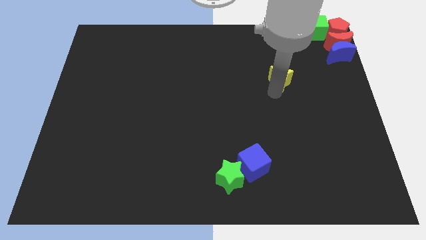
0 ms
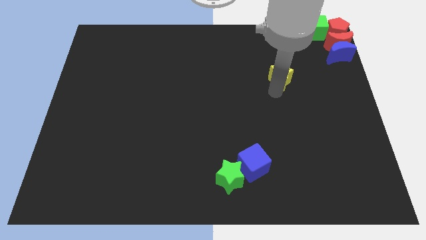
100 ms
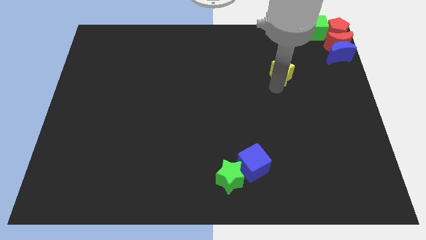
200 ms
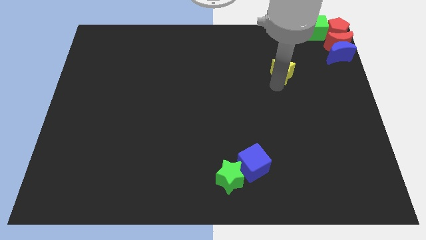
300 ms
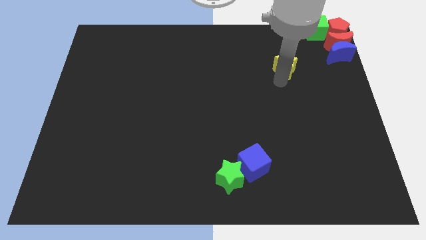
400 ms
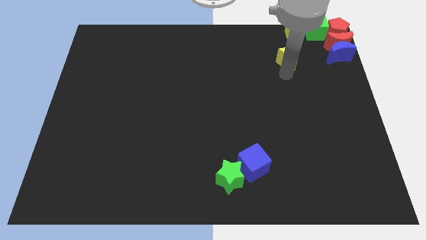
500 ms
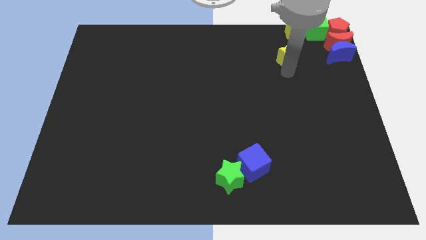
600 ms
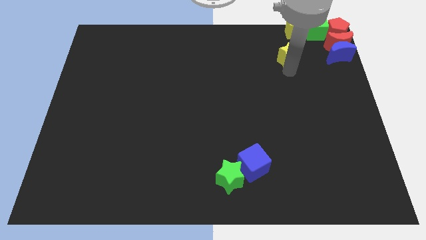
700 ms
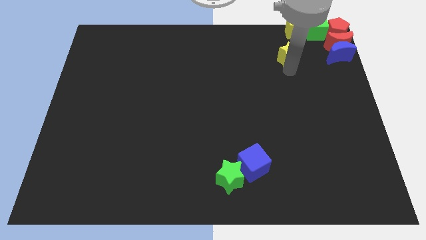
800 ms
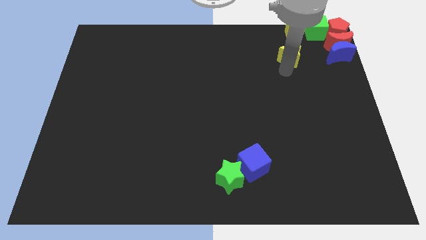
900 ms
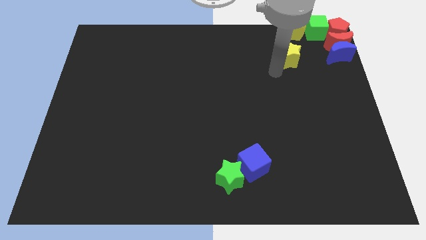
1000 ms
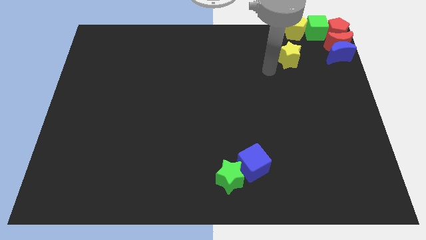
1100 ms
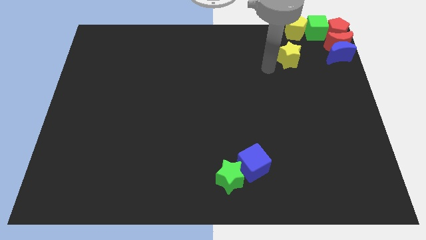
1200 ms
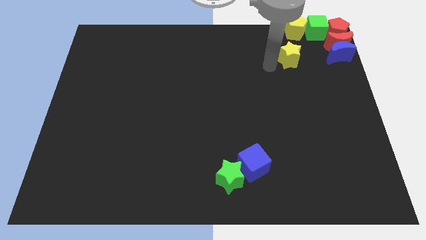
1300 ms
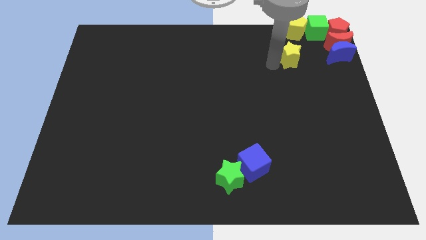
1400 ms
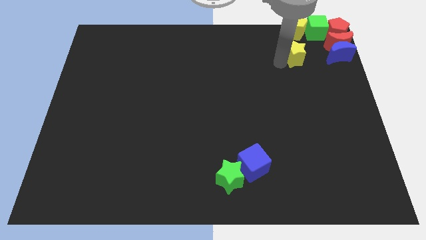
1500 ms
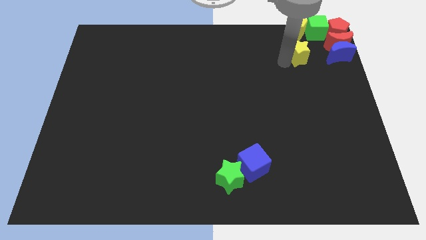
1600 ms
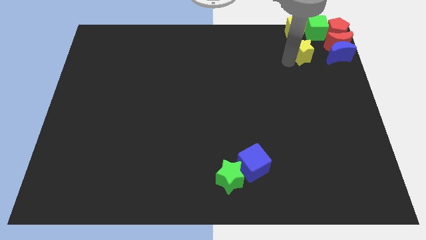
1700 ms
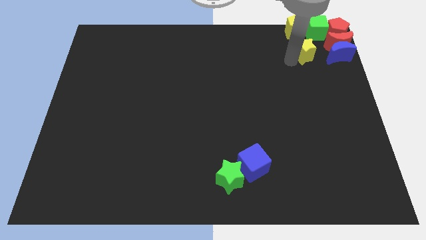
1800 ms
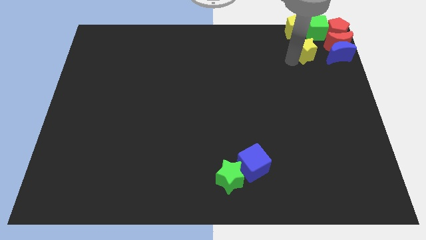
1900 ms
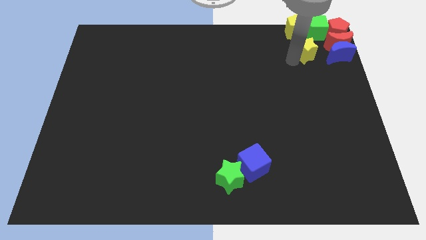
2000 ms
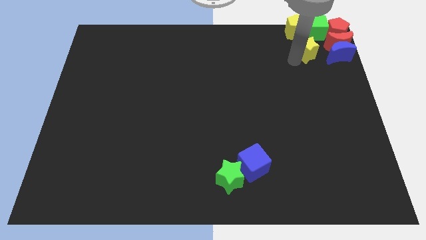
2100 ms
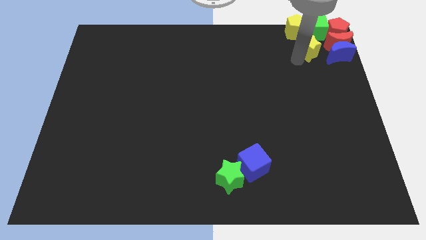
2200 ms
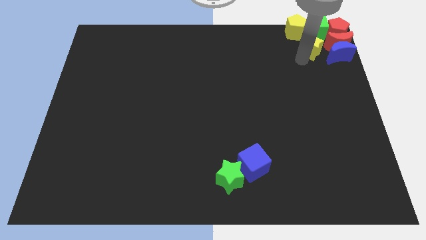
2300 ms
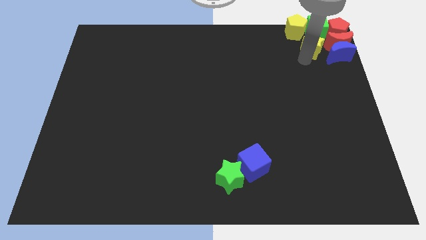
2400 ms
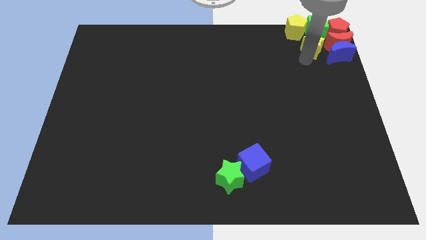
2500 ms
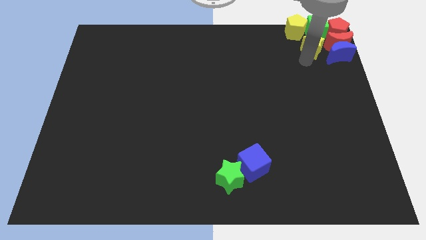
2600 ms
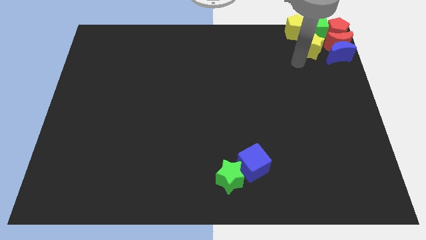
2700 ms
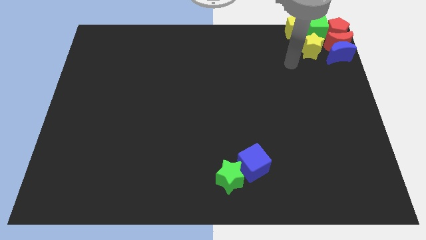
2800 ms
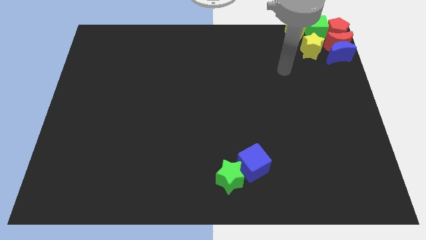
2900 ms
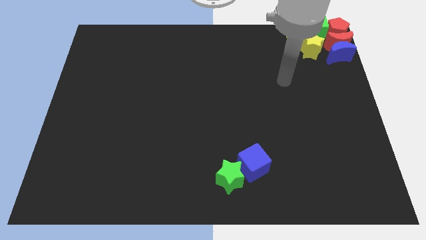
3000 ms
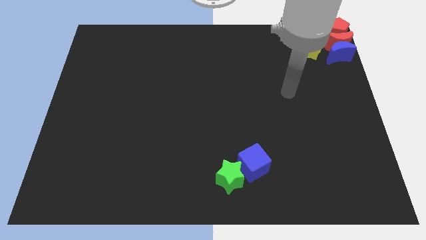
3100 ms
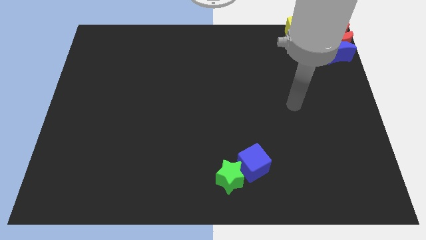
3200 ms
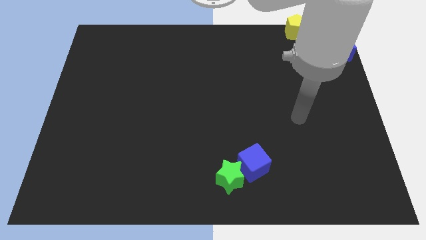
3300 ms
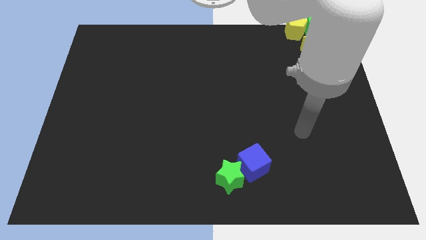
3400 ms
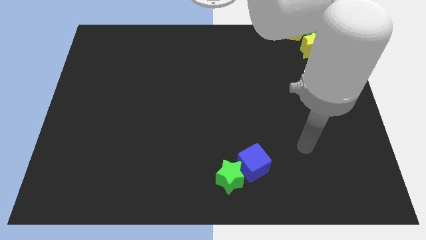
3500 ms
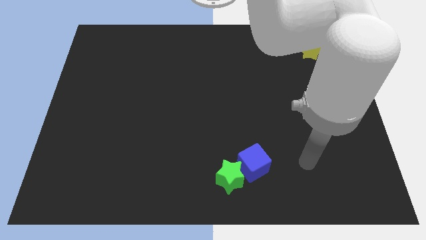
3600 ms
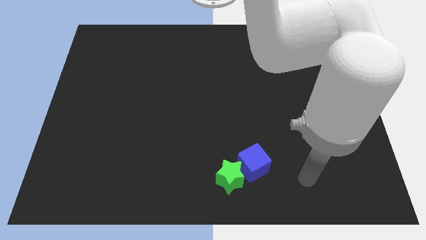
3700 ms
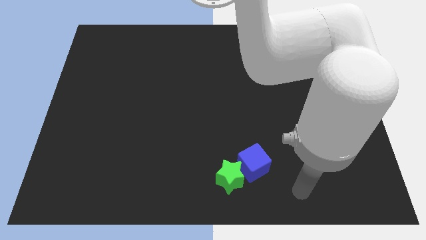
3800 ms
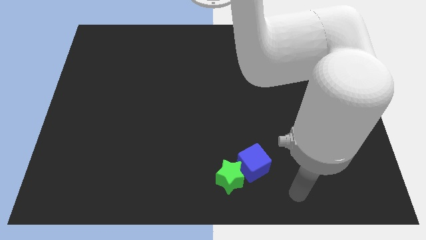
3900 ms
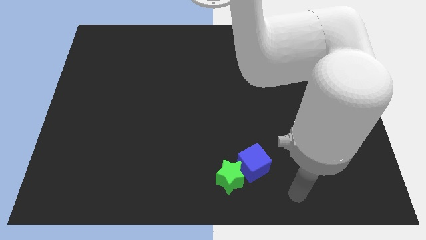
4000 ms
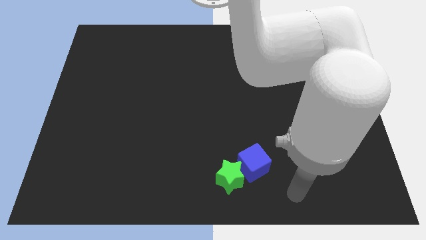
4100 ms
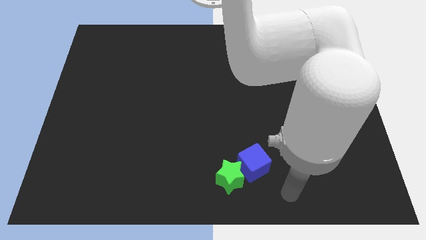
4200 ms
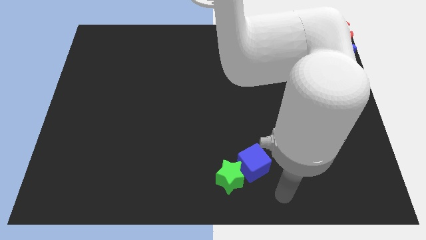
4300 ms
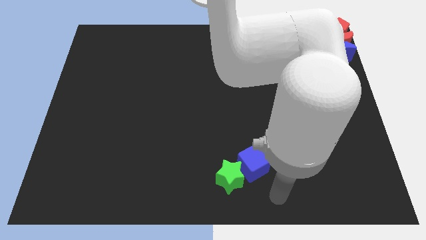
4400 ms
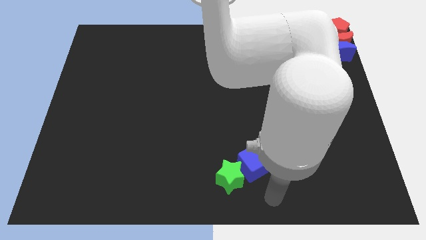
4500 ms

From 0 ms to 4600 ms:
put the yellow star on the left side of the red crescent

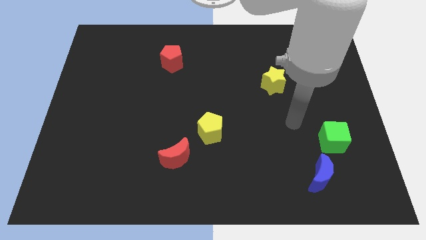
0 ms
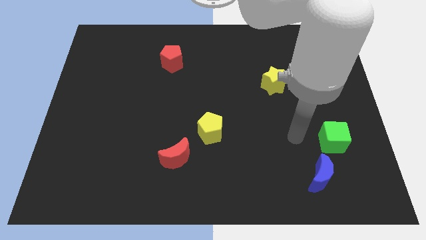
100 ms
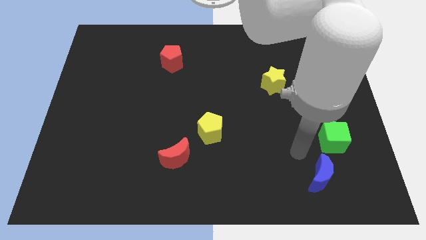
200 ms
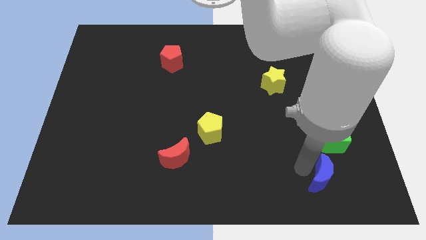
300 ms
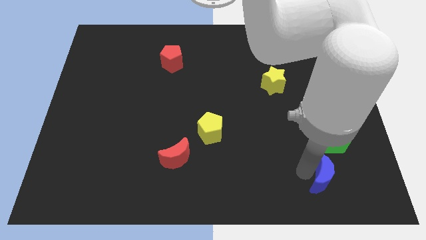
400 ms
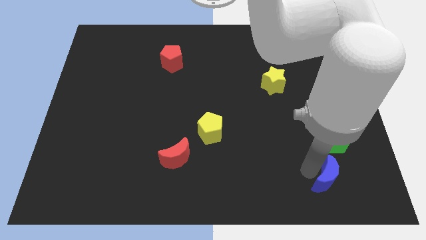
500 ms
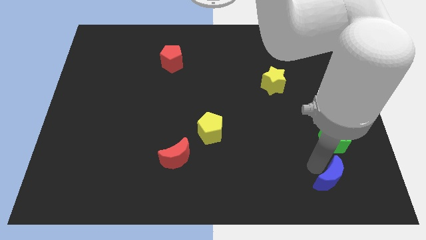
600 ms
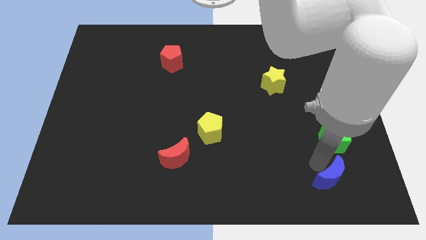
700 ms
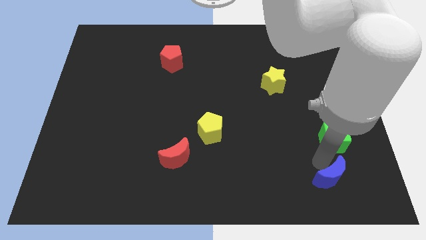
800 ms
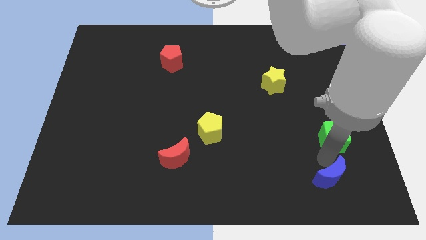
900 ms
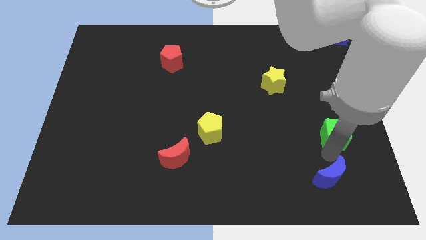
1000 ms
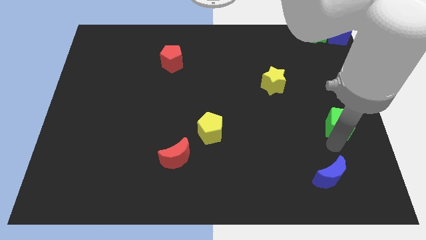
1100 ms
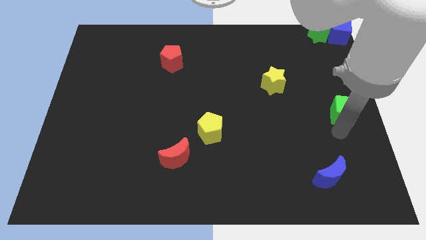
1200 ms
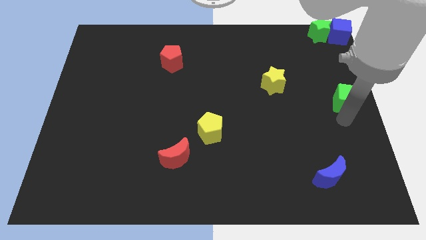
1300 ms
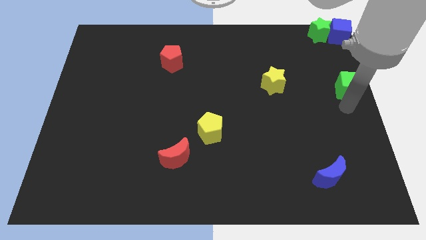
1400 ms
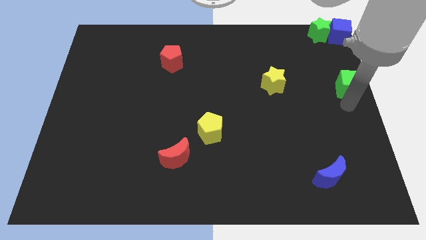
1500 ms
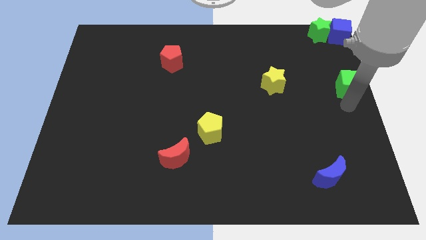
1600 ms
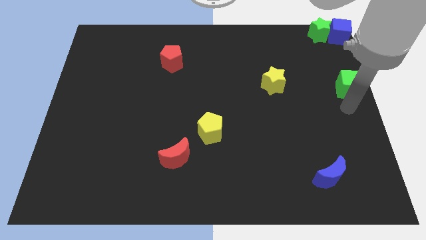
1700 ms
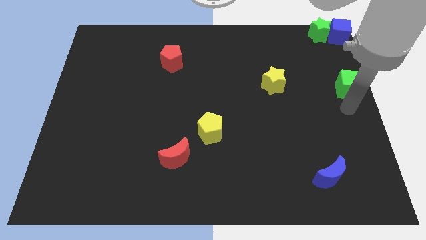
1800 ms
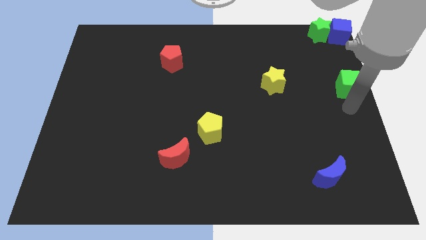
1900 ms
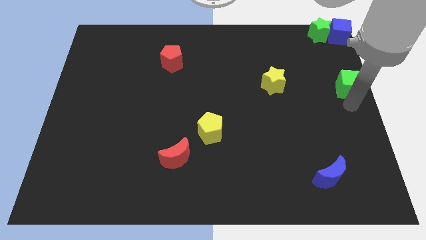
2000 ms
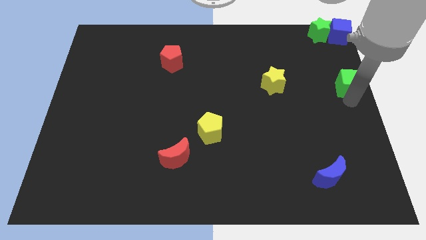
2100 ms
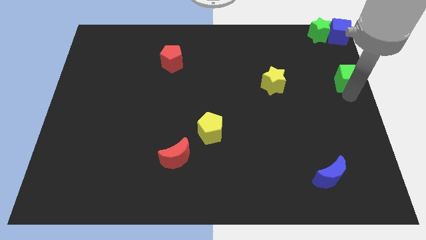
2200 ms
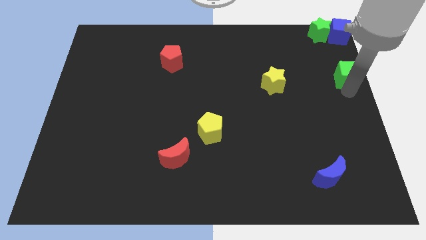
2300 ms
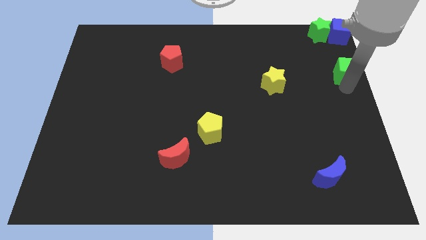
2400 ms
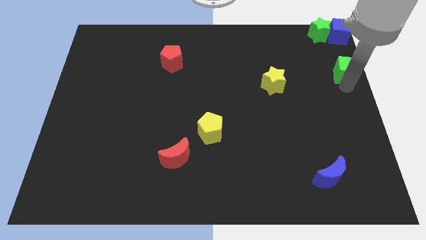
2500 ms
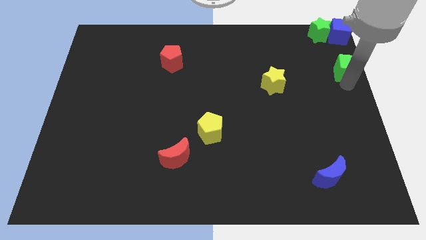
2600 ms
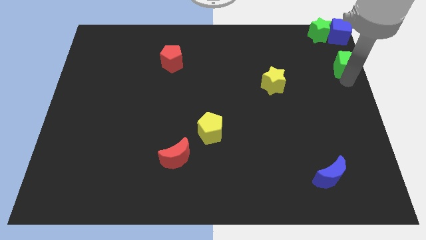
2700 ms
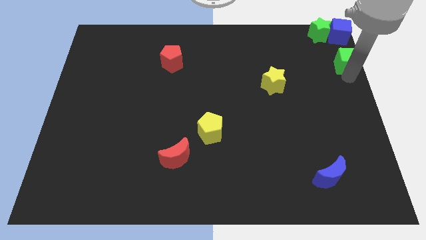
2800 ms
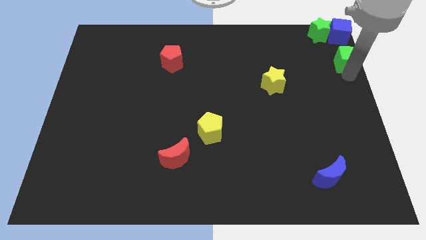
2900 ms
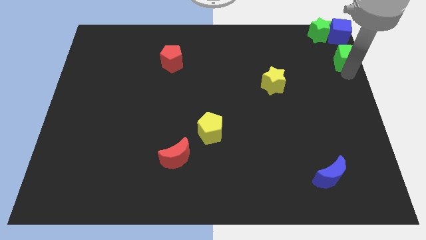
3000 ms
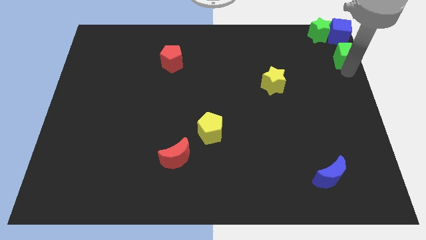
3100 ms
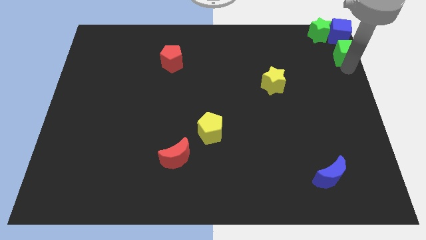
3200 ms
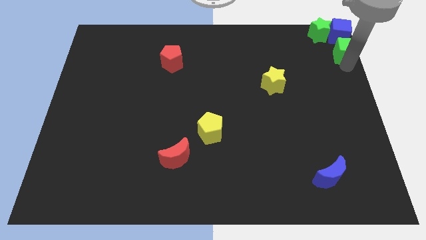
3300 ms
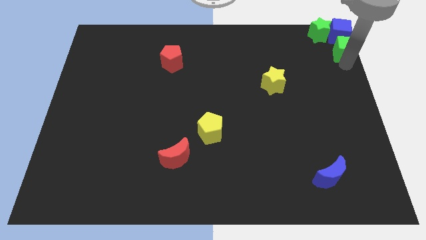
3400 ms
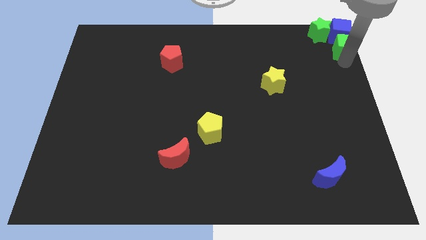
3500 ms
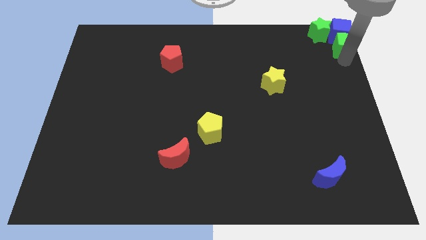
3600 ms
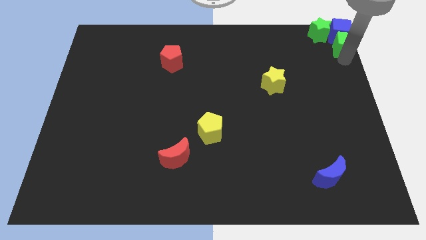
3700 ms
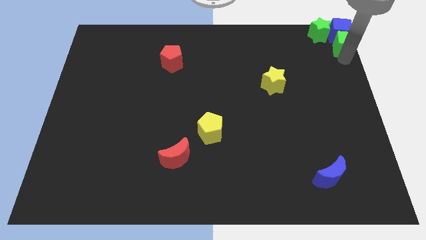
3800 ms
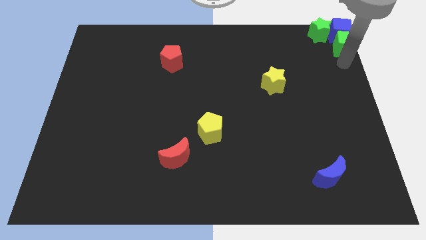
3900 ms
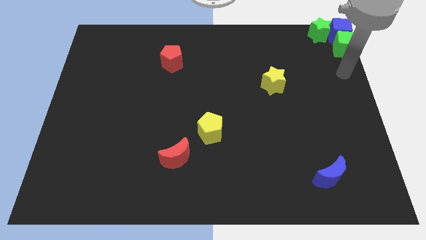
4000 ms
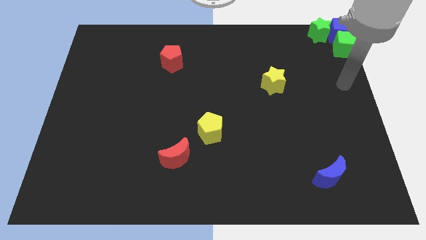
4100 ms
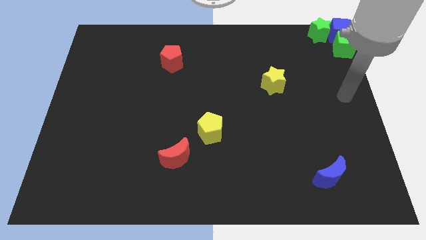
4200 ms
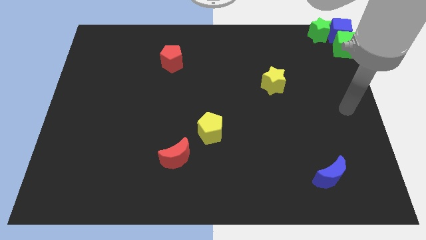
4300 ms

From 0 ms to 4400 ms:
make a green cube to touch the bottom of the blue cube
